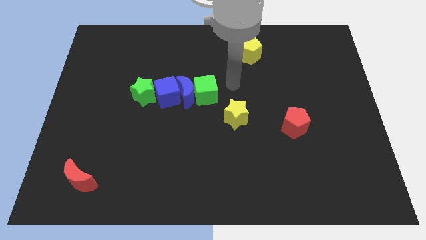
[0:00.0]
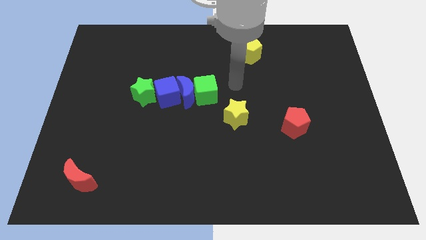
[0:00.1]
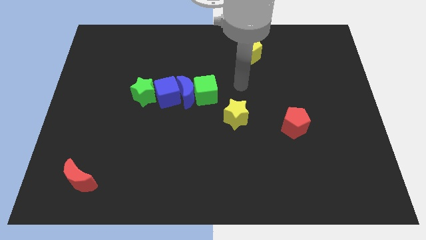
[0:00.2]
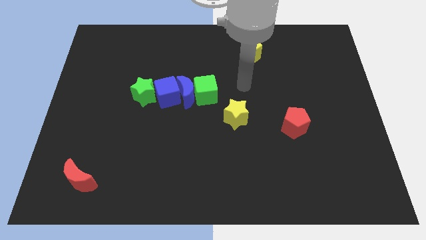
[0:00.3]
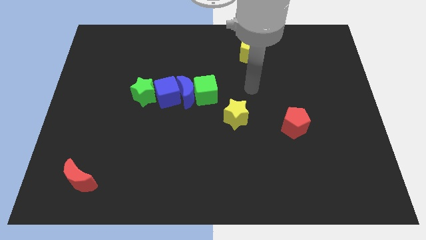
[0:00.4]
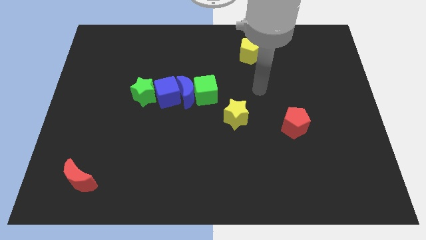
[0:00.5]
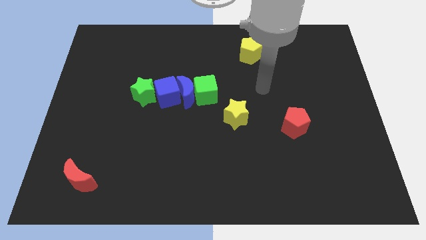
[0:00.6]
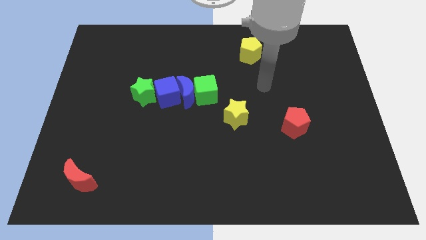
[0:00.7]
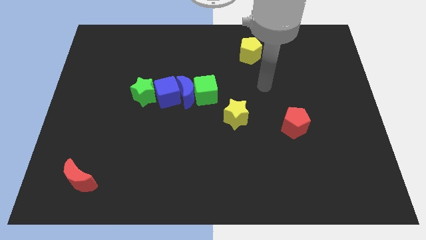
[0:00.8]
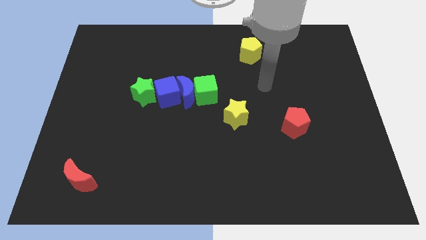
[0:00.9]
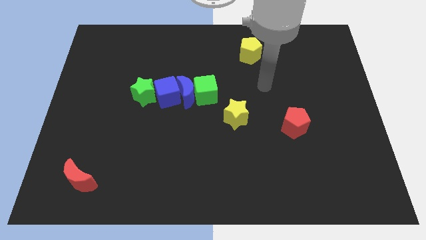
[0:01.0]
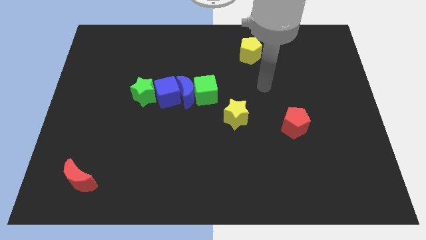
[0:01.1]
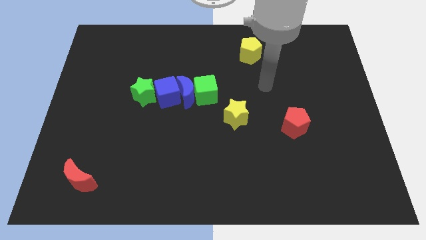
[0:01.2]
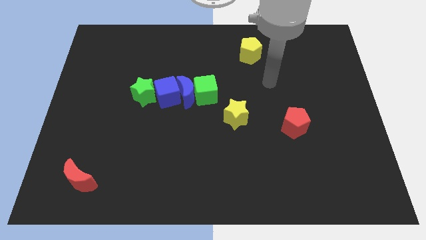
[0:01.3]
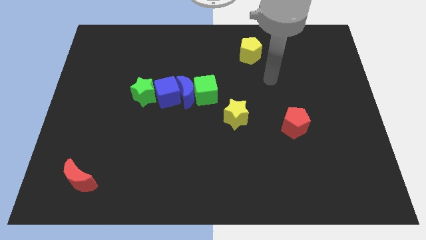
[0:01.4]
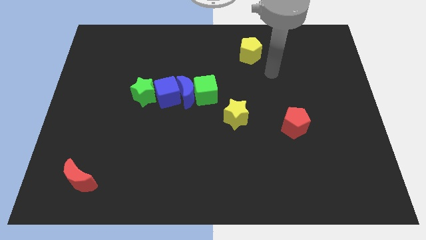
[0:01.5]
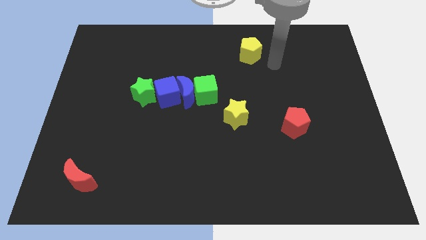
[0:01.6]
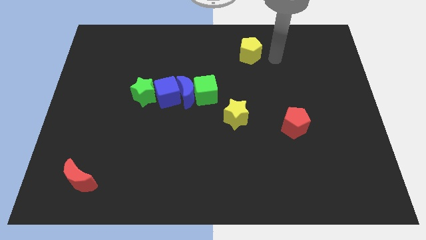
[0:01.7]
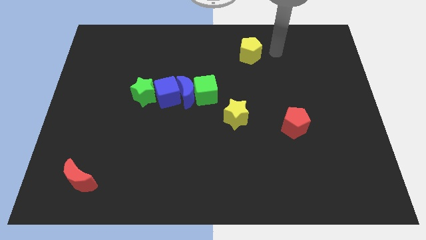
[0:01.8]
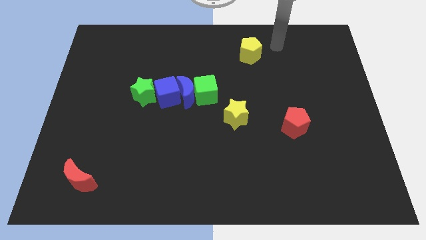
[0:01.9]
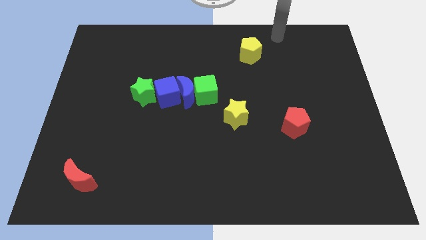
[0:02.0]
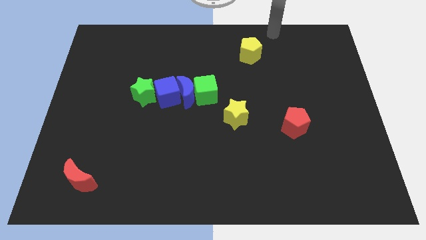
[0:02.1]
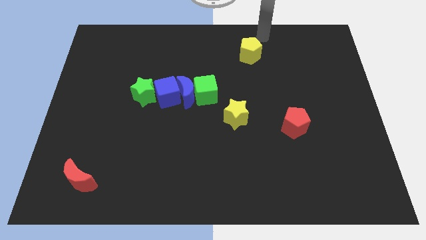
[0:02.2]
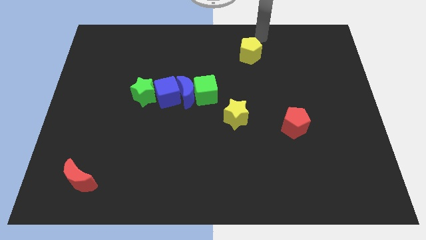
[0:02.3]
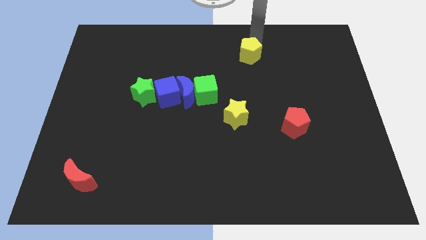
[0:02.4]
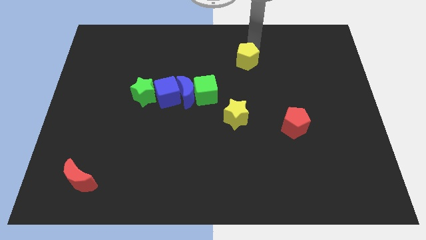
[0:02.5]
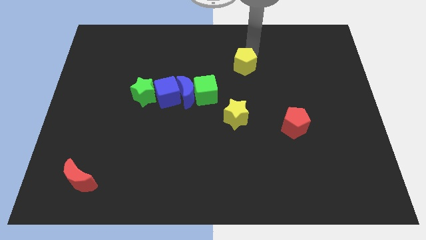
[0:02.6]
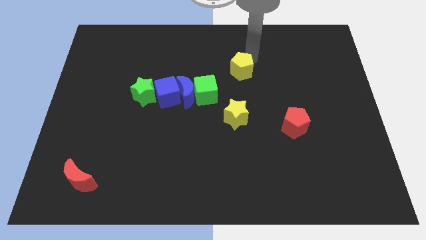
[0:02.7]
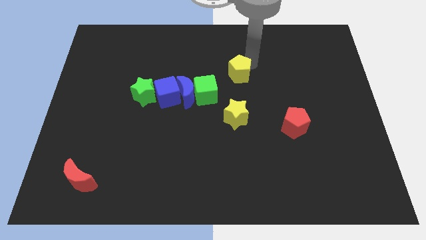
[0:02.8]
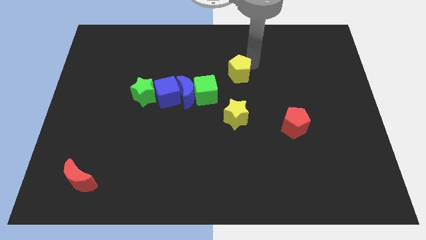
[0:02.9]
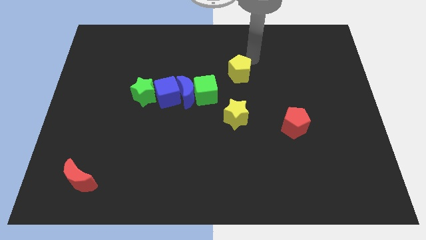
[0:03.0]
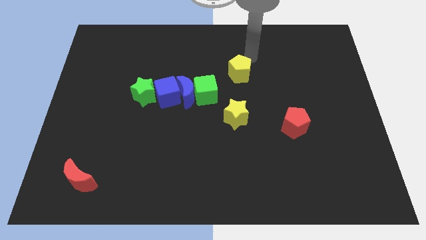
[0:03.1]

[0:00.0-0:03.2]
place the yellow pentagon above the yellow star

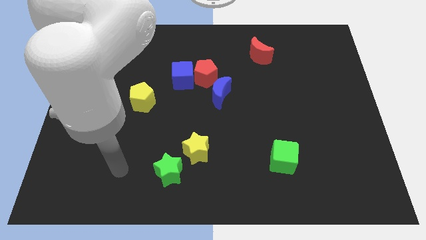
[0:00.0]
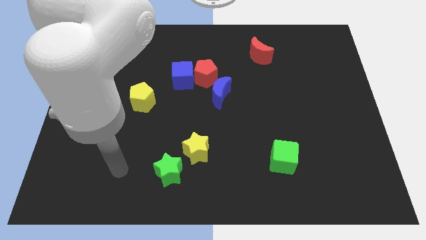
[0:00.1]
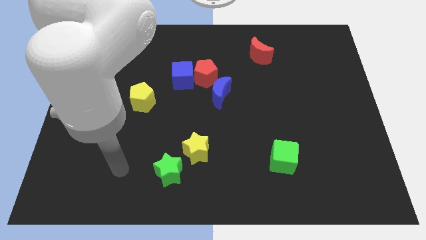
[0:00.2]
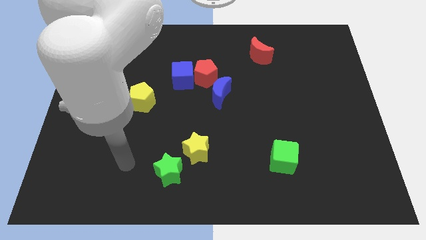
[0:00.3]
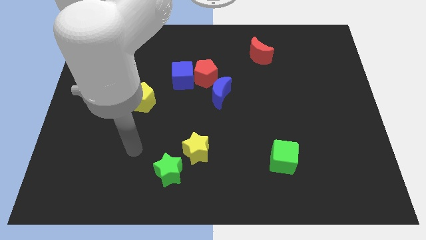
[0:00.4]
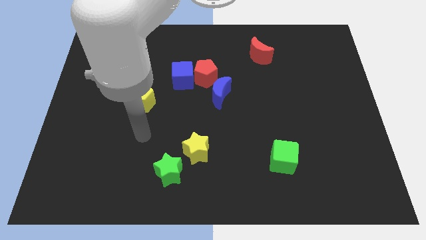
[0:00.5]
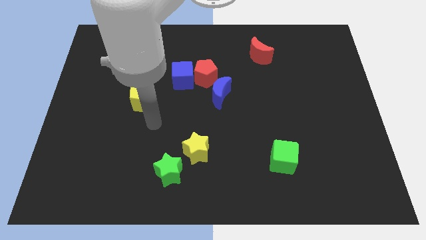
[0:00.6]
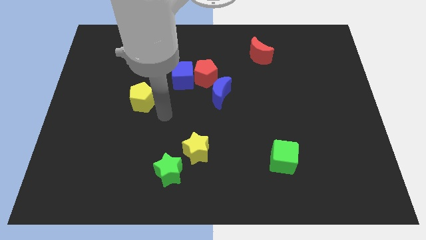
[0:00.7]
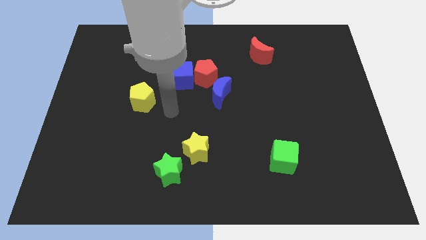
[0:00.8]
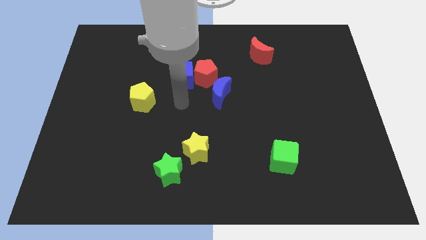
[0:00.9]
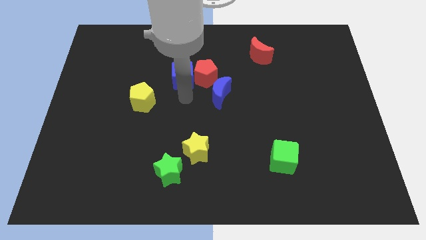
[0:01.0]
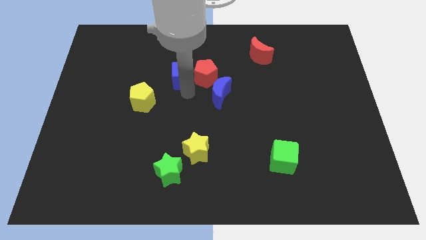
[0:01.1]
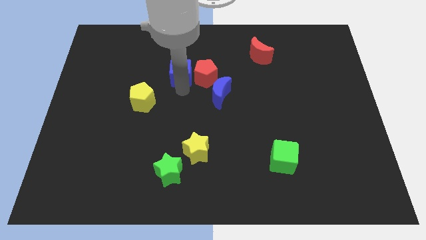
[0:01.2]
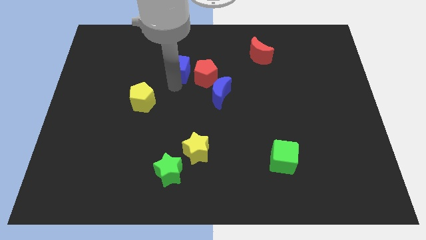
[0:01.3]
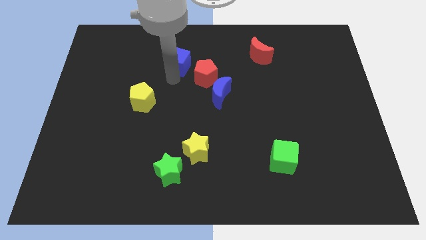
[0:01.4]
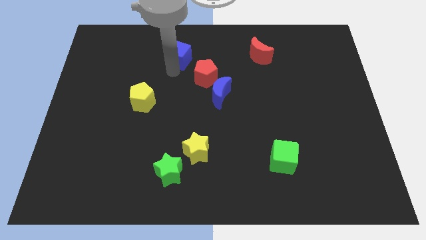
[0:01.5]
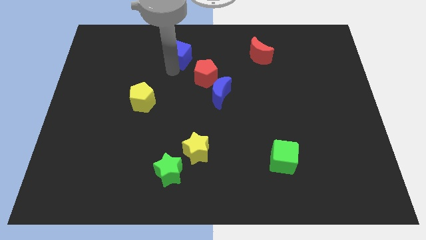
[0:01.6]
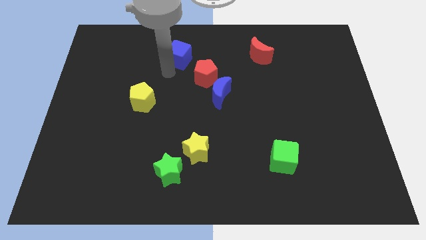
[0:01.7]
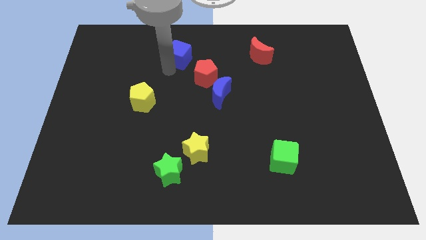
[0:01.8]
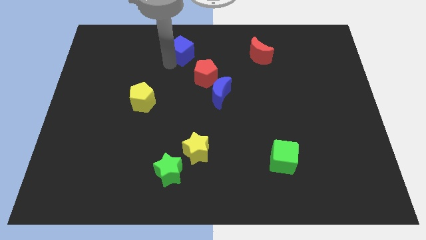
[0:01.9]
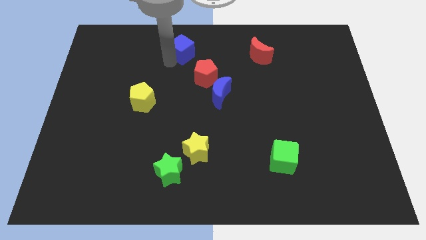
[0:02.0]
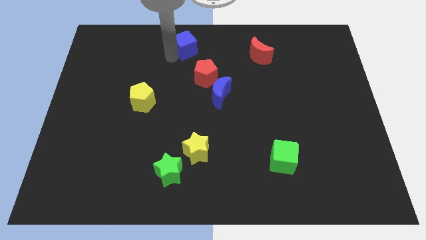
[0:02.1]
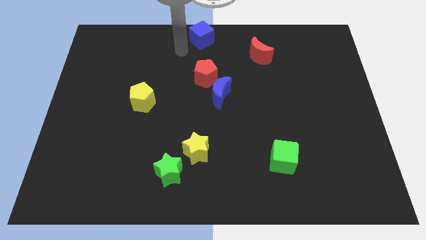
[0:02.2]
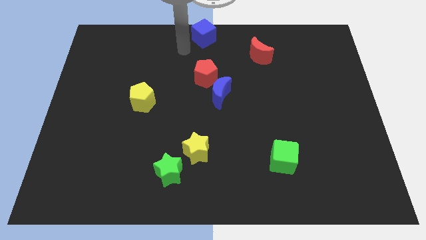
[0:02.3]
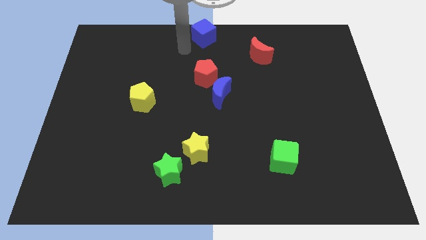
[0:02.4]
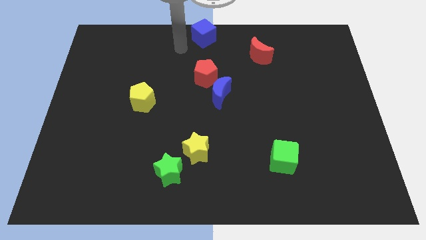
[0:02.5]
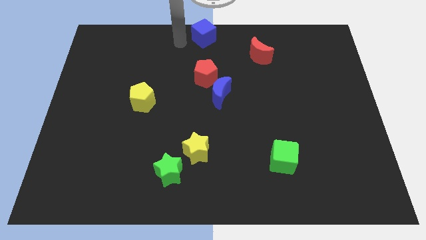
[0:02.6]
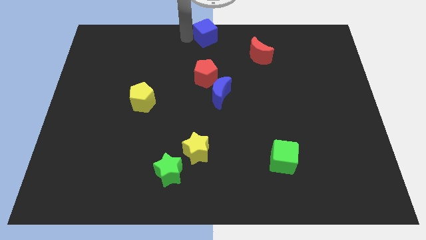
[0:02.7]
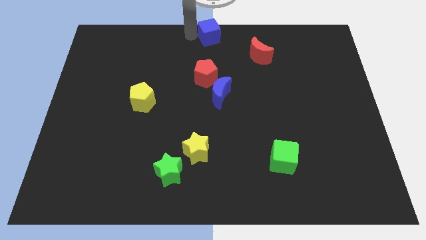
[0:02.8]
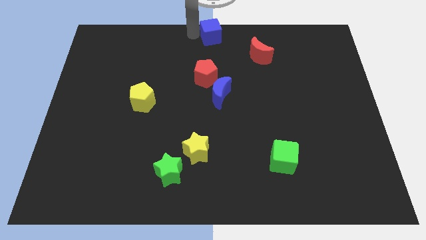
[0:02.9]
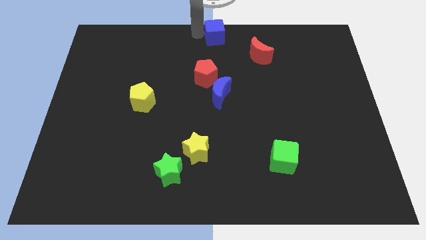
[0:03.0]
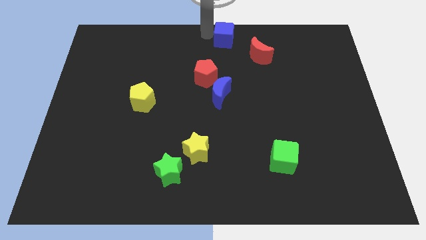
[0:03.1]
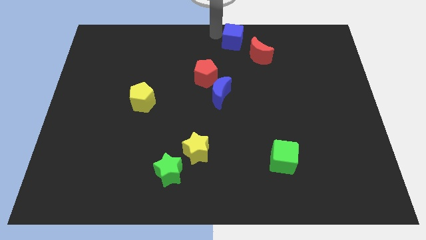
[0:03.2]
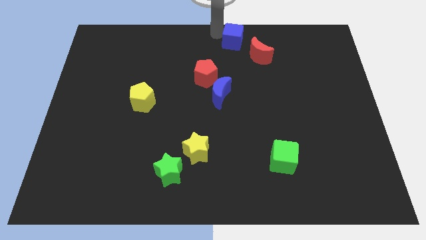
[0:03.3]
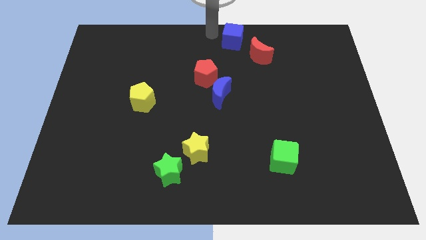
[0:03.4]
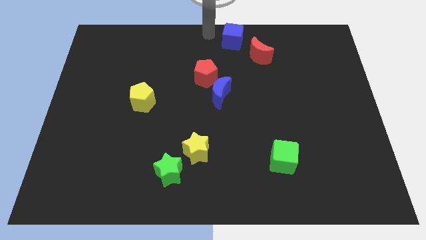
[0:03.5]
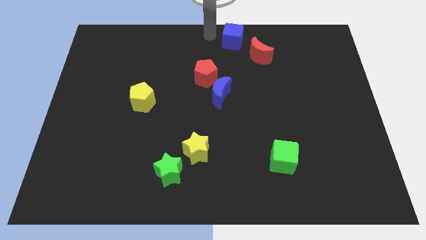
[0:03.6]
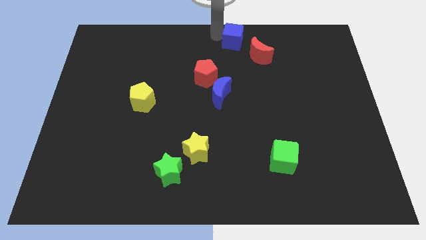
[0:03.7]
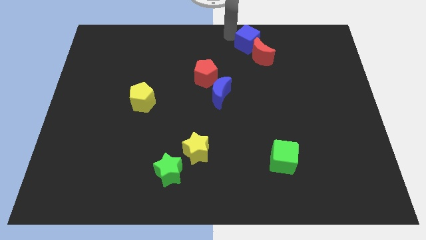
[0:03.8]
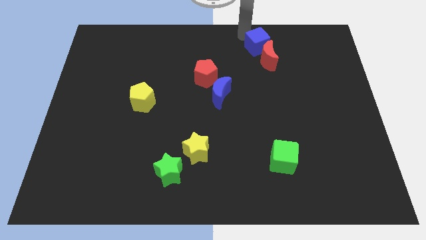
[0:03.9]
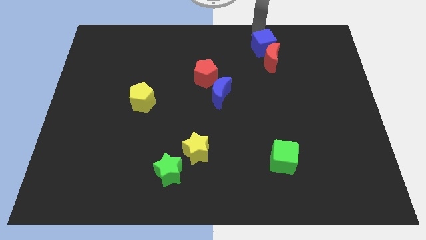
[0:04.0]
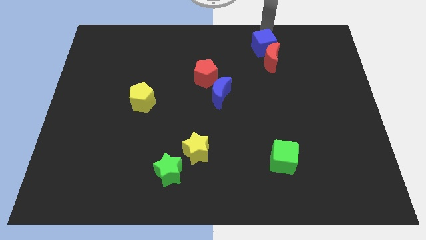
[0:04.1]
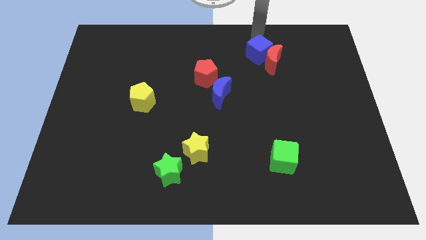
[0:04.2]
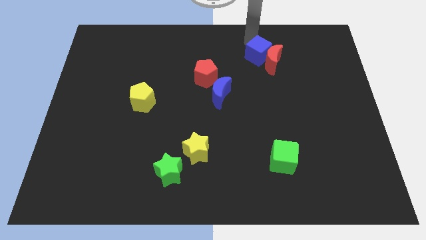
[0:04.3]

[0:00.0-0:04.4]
make the blue cube to touch the left side of the red crescent

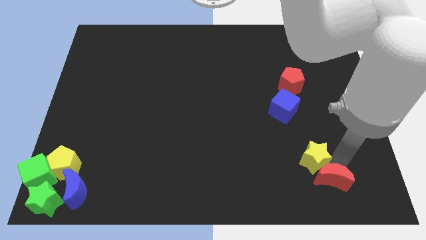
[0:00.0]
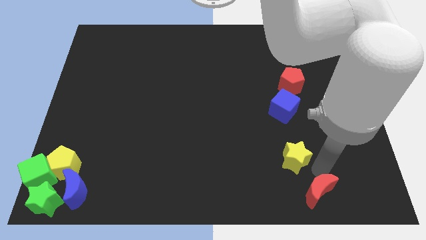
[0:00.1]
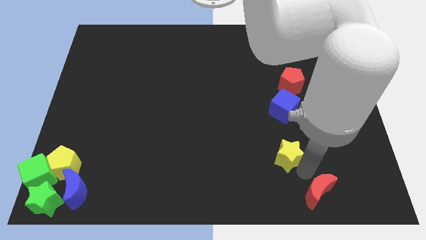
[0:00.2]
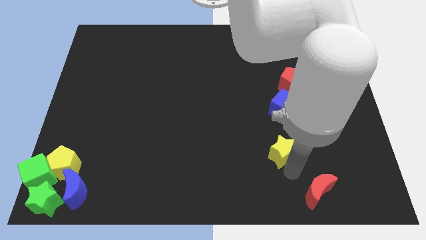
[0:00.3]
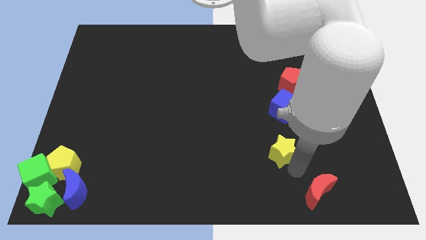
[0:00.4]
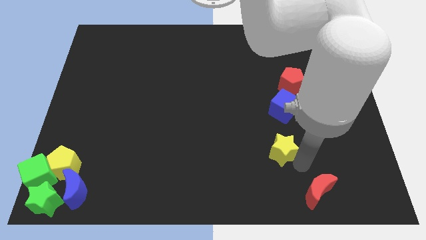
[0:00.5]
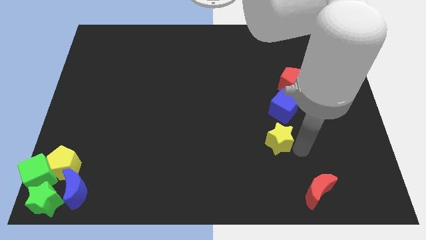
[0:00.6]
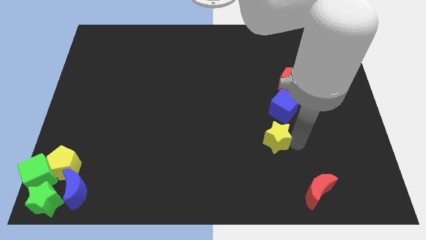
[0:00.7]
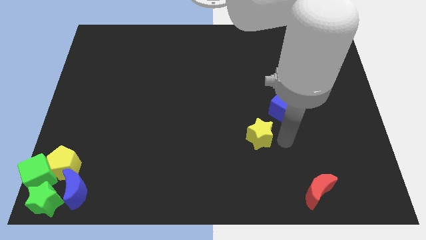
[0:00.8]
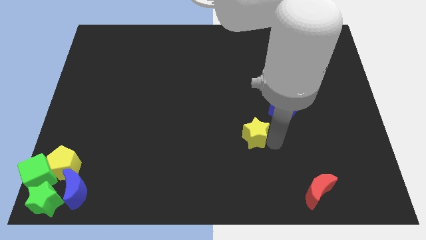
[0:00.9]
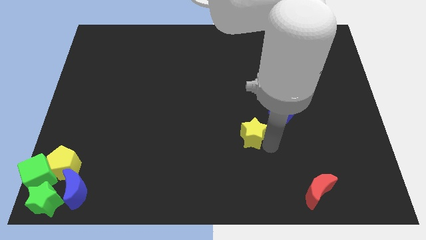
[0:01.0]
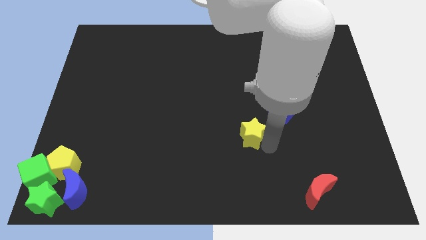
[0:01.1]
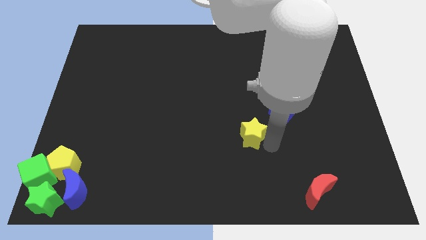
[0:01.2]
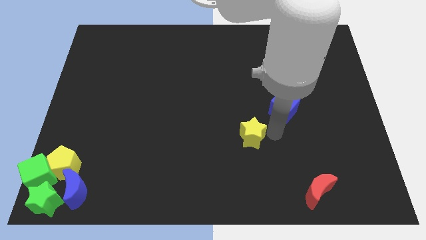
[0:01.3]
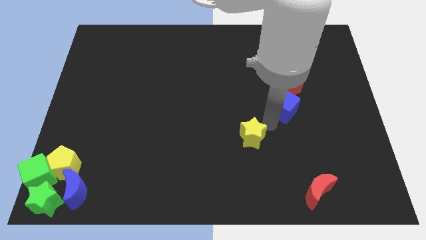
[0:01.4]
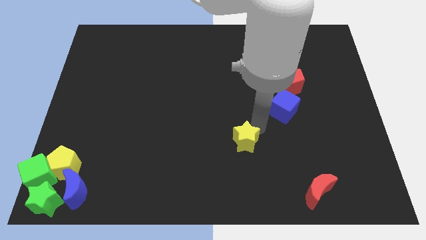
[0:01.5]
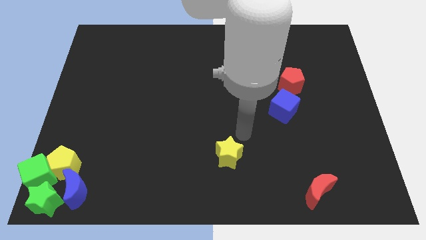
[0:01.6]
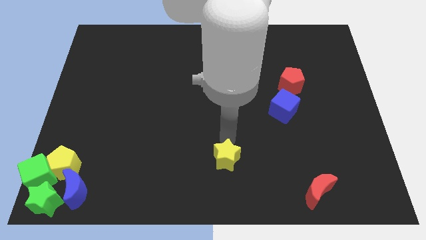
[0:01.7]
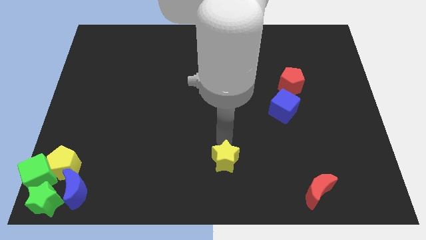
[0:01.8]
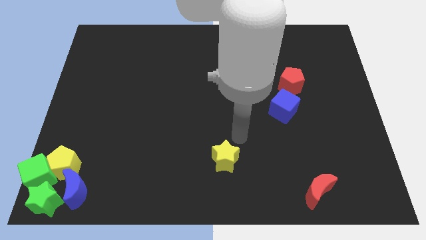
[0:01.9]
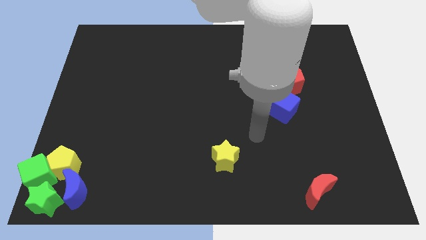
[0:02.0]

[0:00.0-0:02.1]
push the yellow star towards the left center of the board
